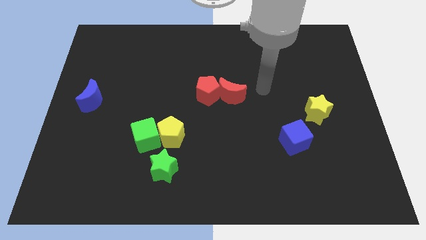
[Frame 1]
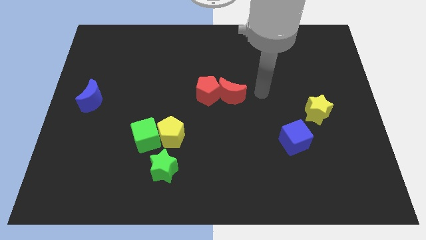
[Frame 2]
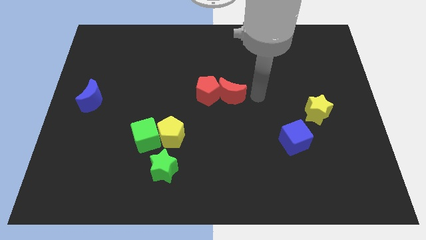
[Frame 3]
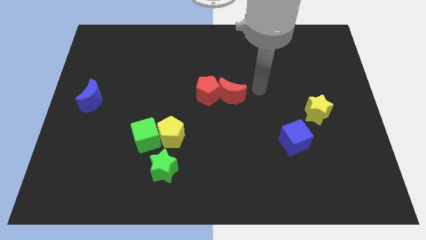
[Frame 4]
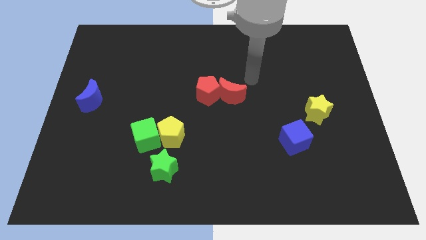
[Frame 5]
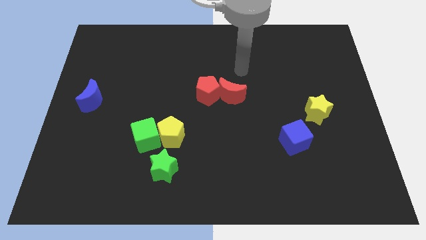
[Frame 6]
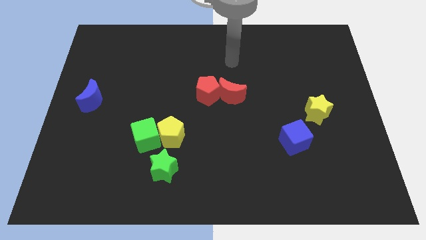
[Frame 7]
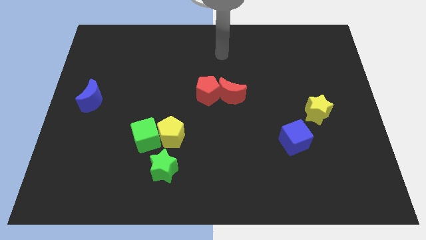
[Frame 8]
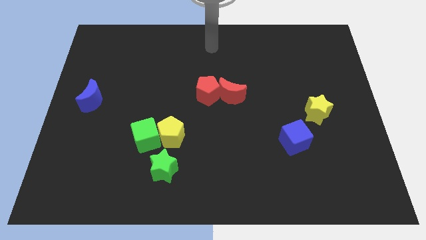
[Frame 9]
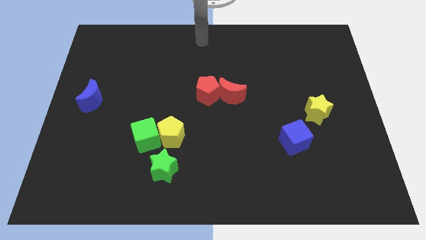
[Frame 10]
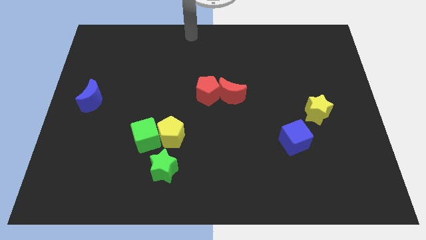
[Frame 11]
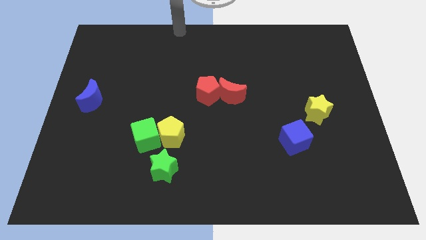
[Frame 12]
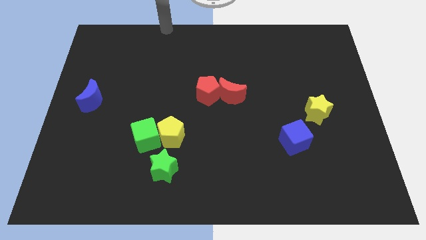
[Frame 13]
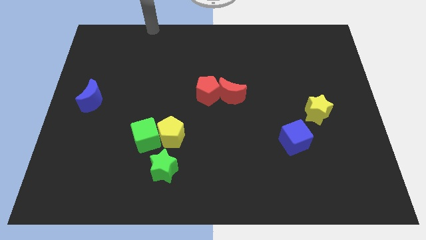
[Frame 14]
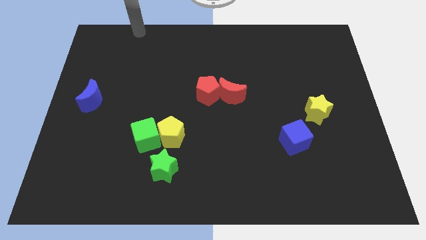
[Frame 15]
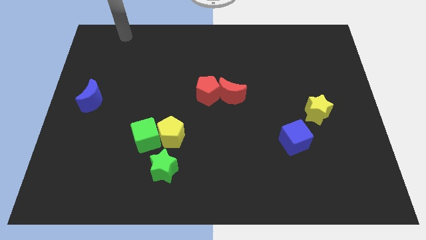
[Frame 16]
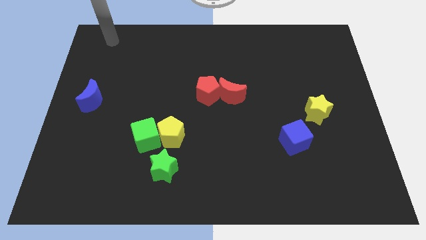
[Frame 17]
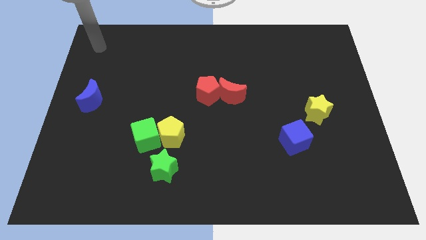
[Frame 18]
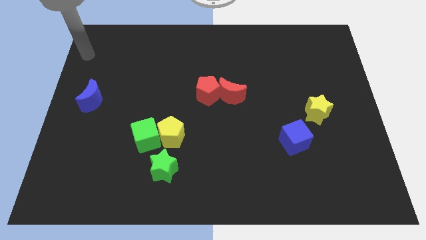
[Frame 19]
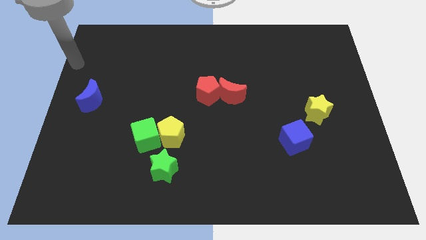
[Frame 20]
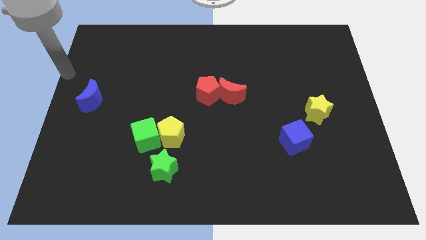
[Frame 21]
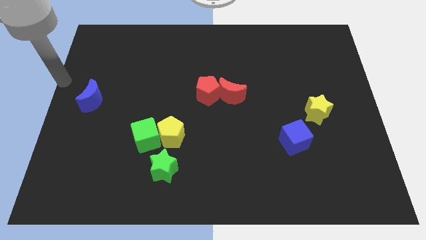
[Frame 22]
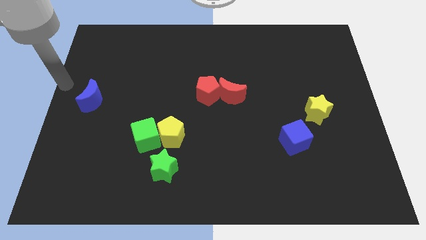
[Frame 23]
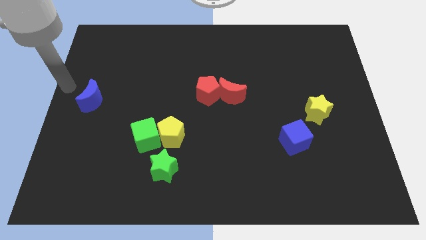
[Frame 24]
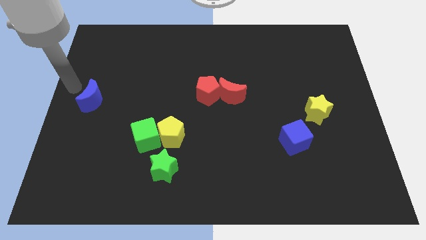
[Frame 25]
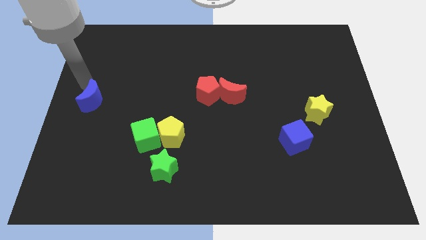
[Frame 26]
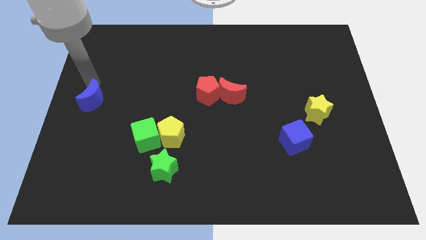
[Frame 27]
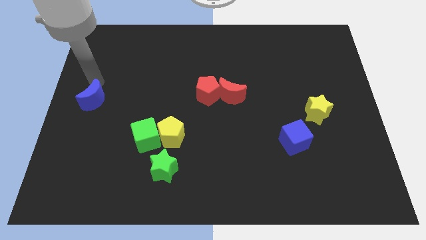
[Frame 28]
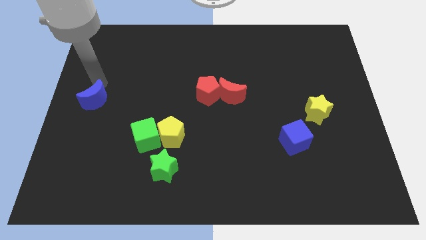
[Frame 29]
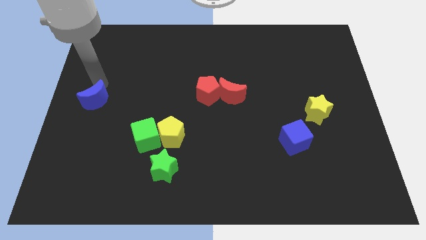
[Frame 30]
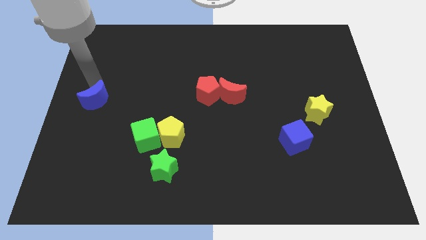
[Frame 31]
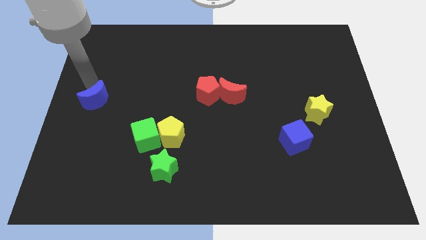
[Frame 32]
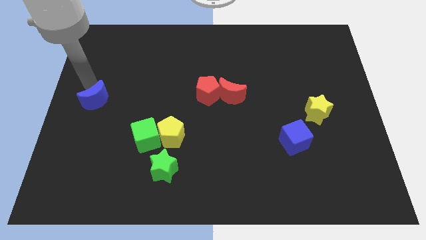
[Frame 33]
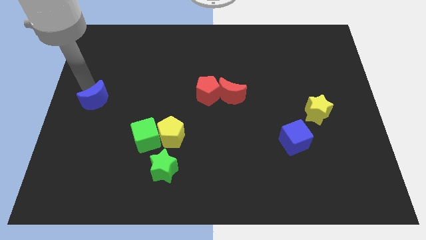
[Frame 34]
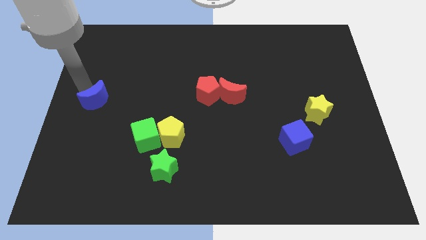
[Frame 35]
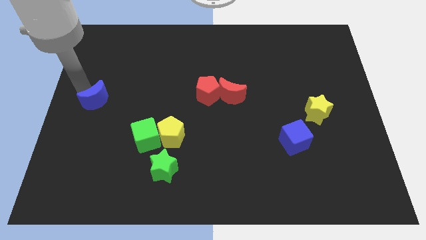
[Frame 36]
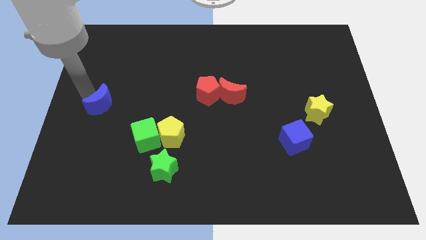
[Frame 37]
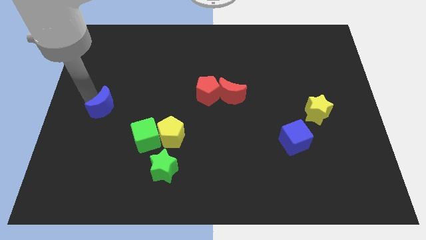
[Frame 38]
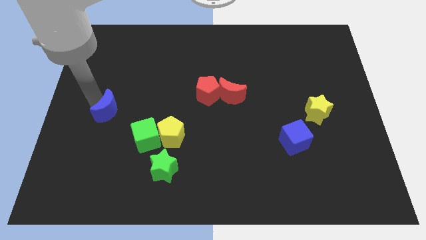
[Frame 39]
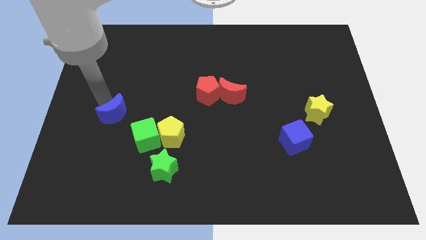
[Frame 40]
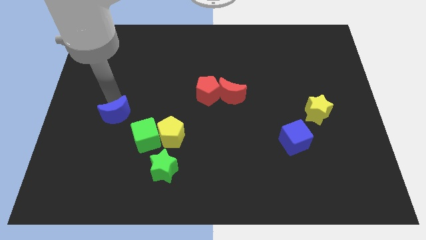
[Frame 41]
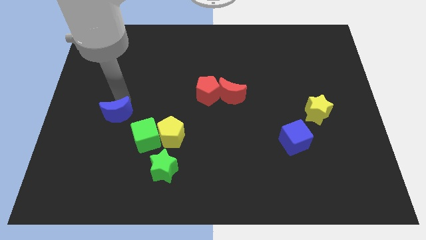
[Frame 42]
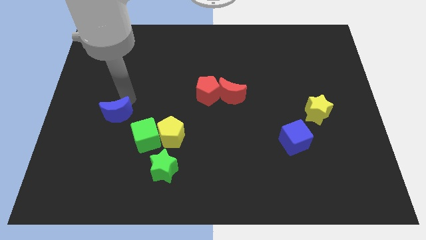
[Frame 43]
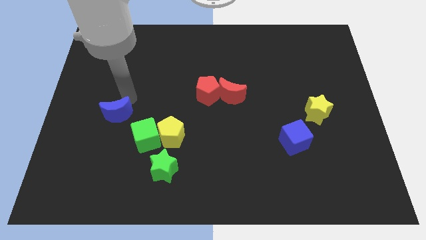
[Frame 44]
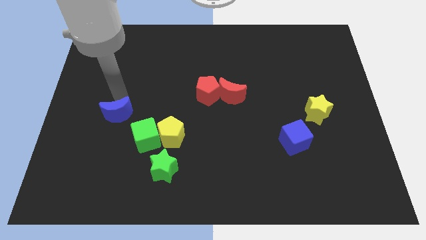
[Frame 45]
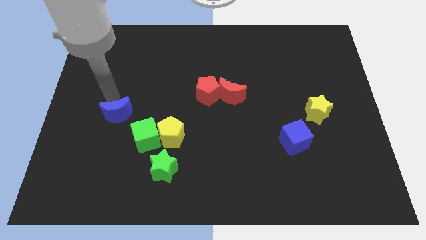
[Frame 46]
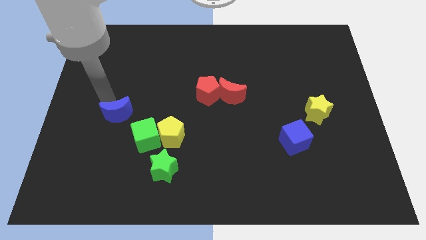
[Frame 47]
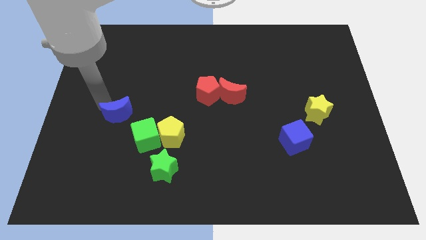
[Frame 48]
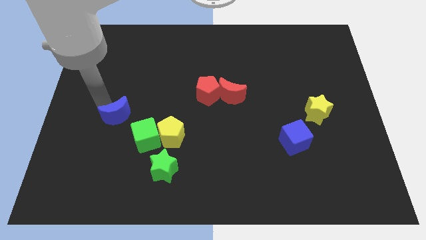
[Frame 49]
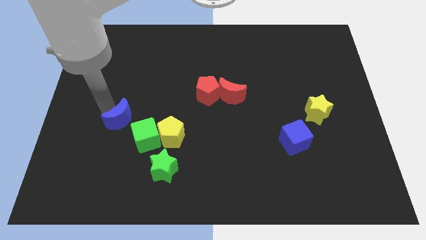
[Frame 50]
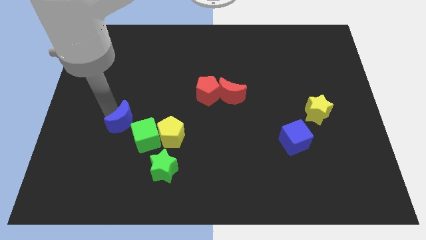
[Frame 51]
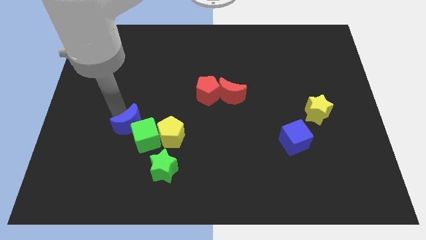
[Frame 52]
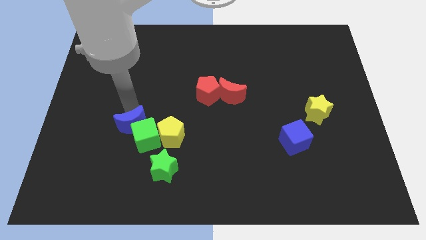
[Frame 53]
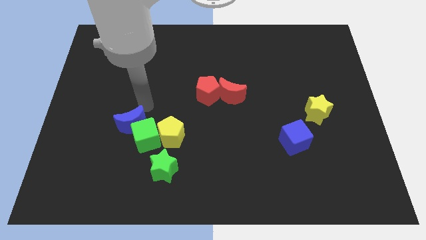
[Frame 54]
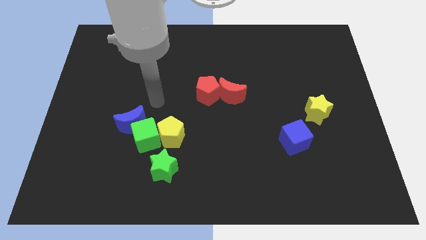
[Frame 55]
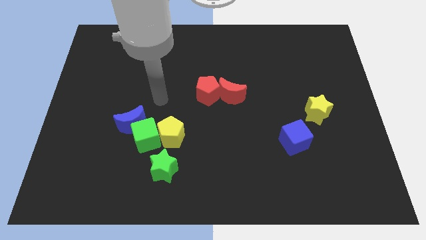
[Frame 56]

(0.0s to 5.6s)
place blue crescent on top of green block

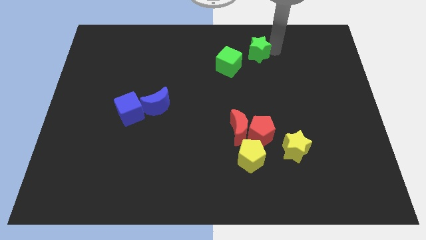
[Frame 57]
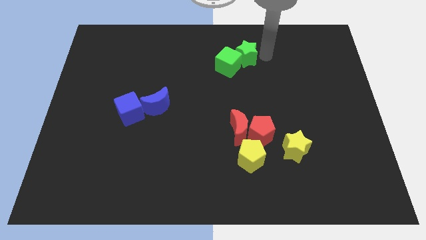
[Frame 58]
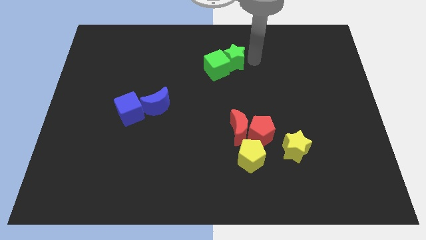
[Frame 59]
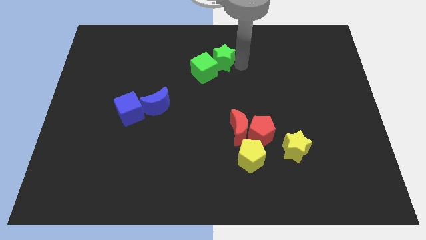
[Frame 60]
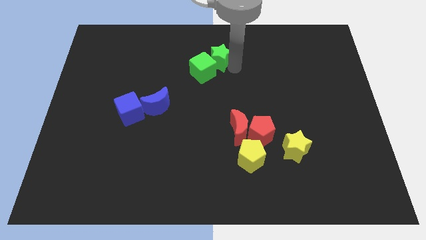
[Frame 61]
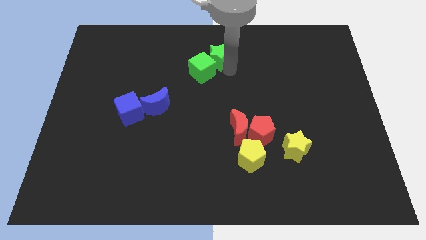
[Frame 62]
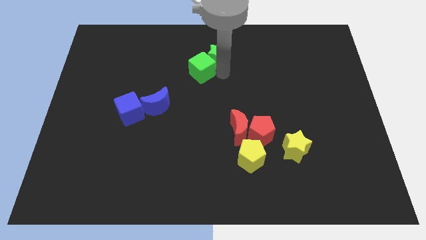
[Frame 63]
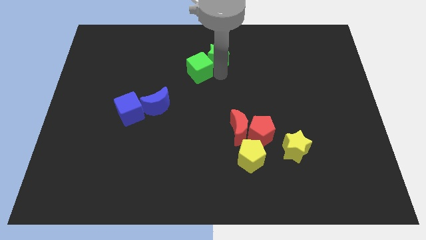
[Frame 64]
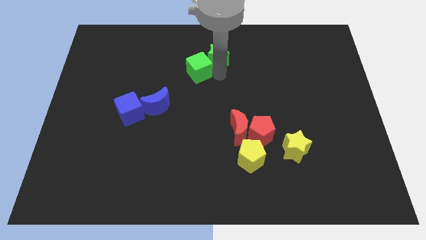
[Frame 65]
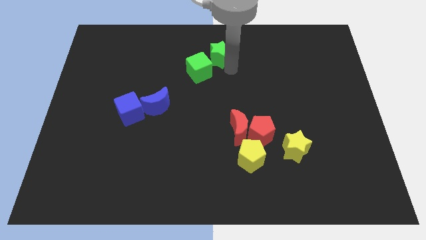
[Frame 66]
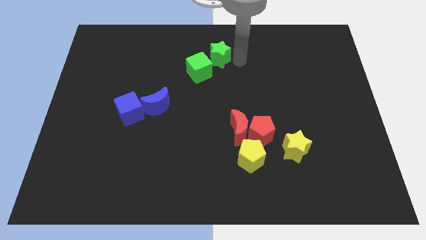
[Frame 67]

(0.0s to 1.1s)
push green cube with the green star

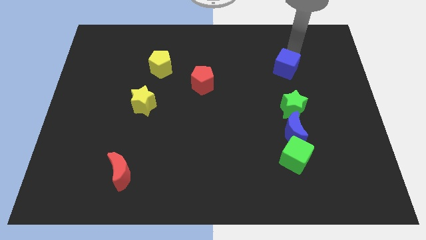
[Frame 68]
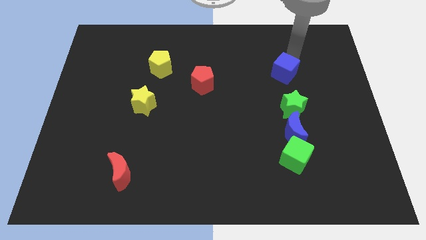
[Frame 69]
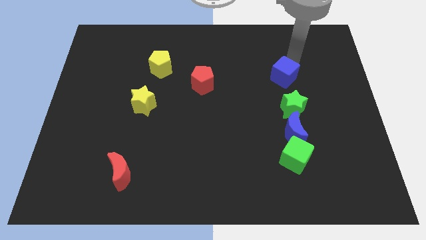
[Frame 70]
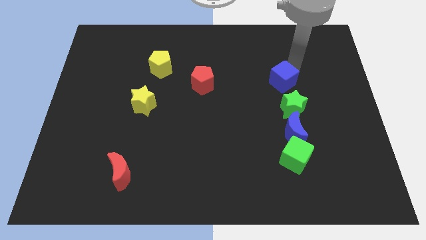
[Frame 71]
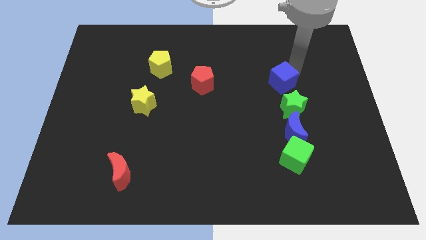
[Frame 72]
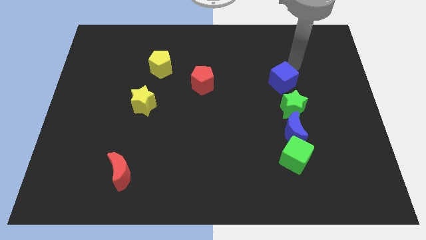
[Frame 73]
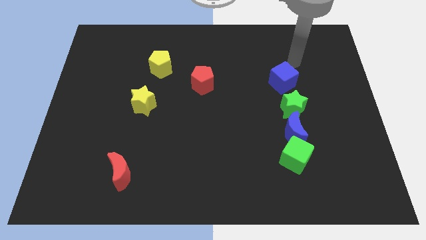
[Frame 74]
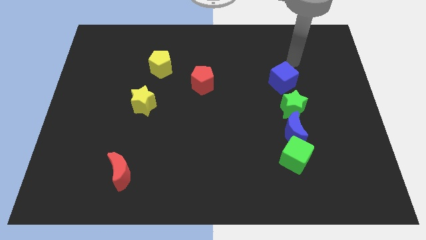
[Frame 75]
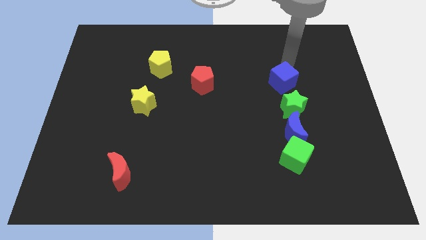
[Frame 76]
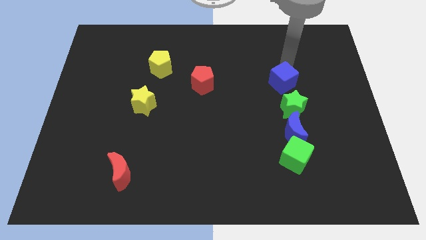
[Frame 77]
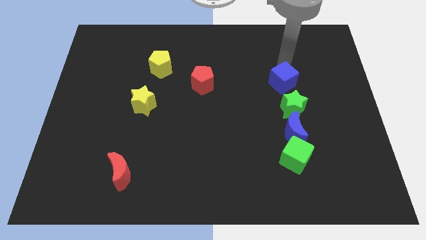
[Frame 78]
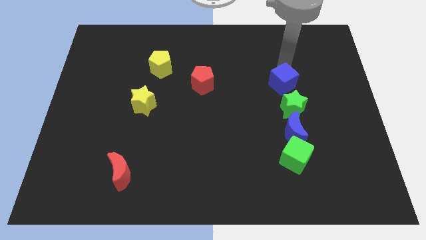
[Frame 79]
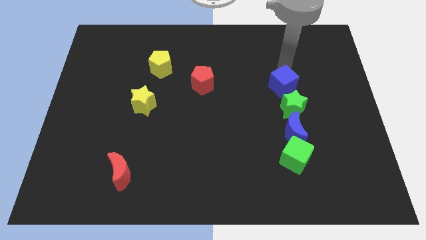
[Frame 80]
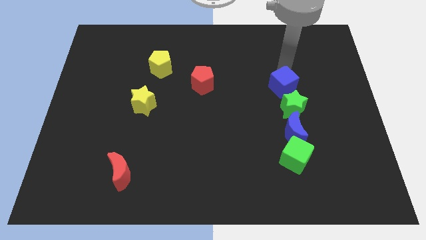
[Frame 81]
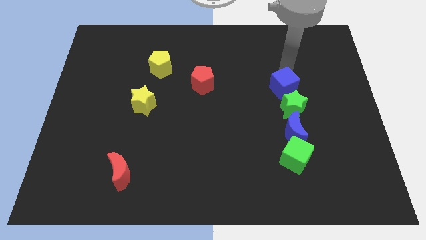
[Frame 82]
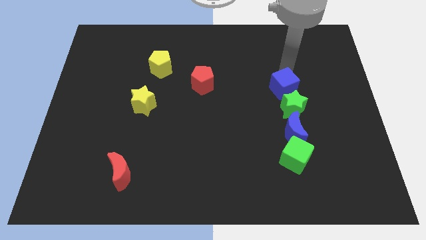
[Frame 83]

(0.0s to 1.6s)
move blue cube top to the green star

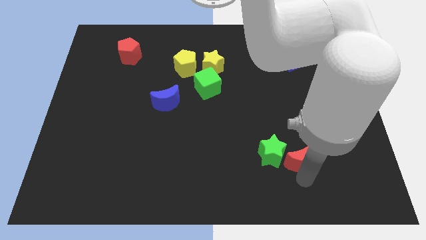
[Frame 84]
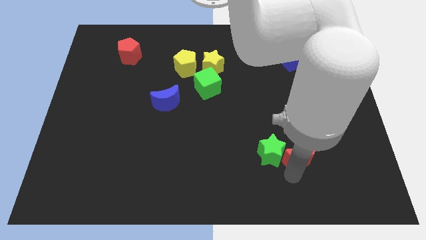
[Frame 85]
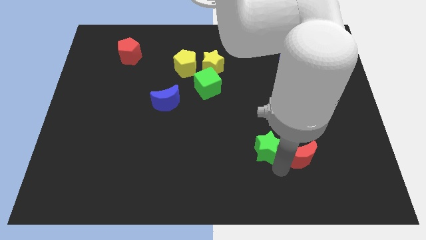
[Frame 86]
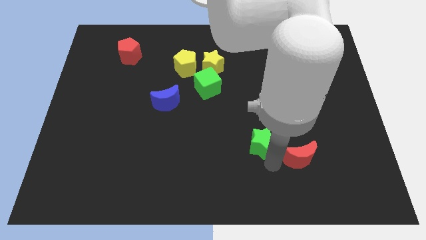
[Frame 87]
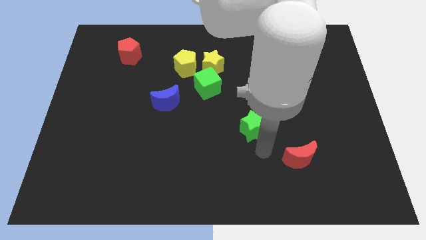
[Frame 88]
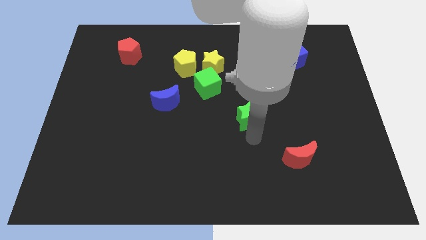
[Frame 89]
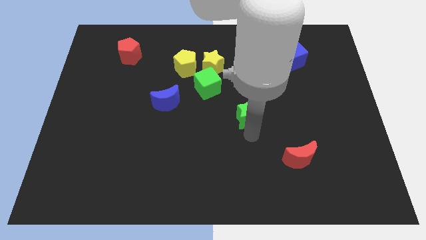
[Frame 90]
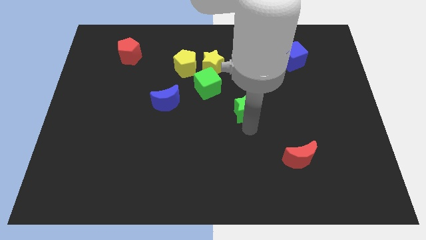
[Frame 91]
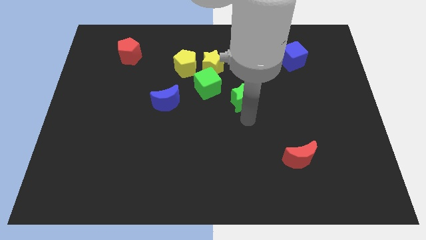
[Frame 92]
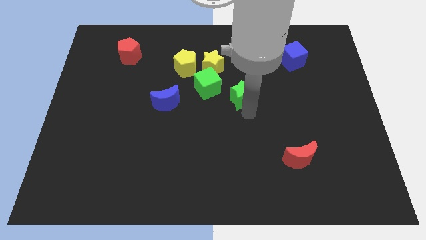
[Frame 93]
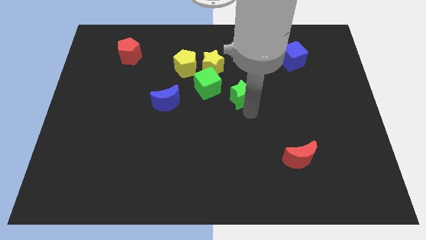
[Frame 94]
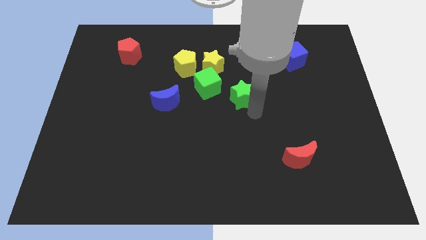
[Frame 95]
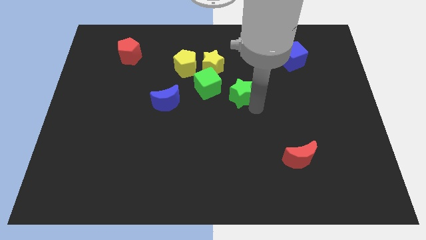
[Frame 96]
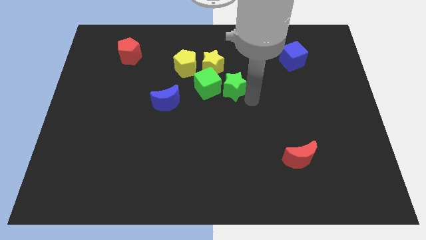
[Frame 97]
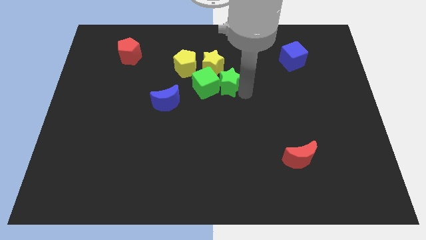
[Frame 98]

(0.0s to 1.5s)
move green star close to green cube
